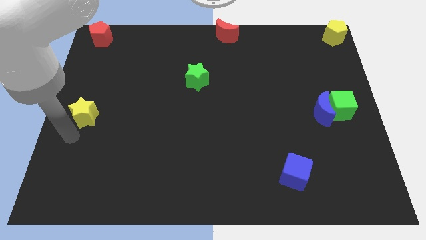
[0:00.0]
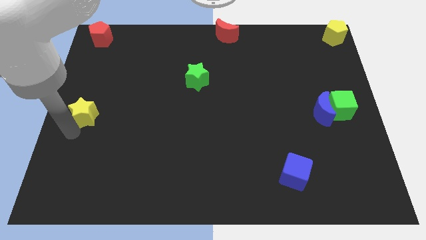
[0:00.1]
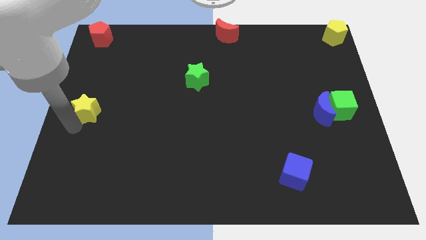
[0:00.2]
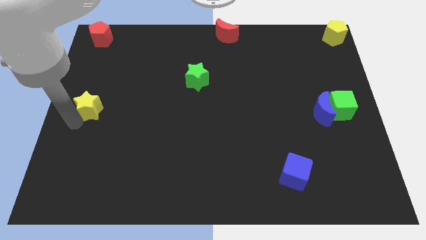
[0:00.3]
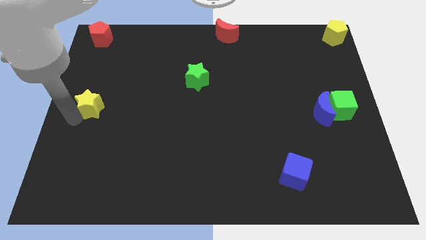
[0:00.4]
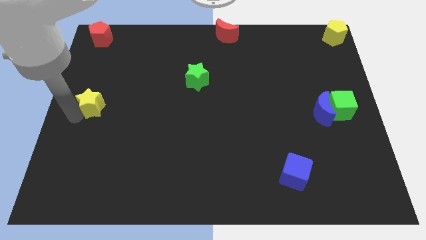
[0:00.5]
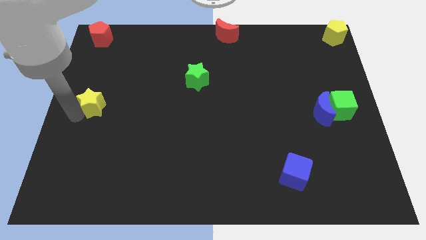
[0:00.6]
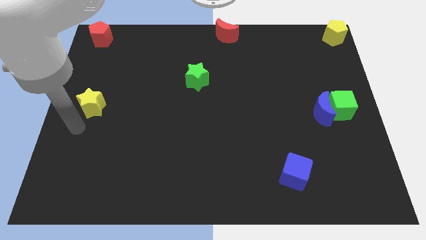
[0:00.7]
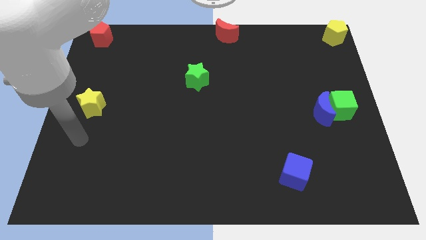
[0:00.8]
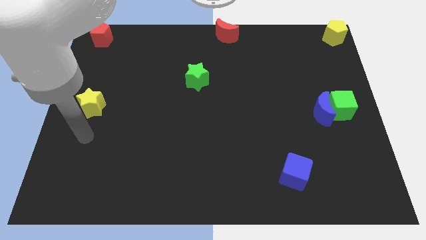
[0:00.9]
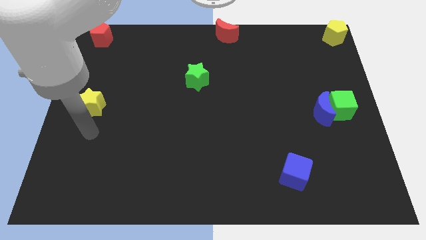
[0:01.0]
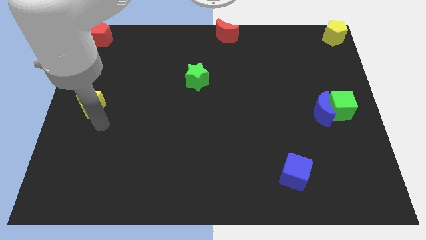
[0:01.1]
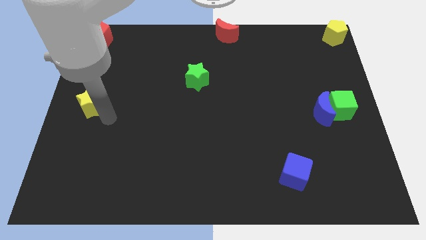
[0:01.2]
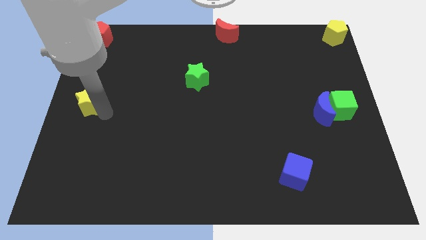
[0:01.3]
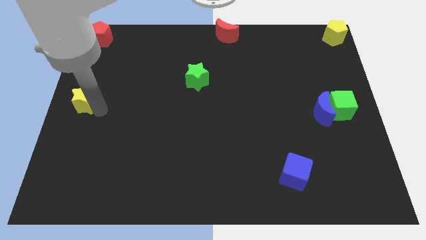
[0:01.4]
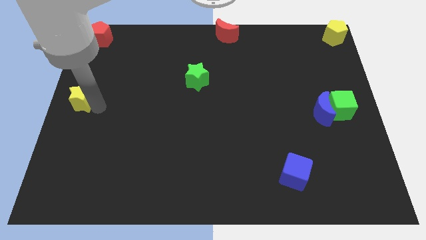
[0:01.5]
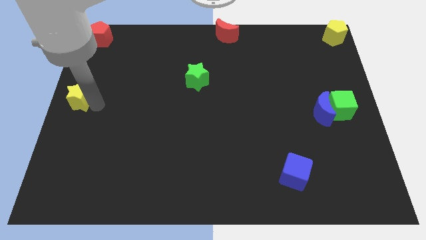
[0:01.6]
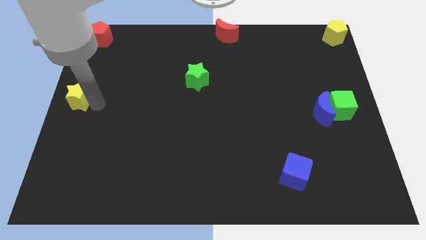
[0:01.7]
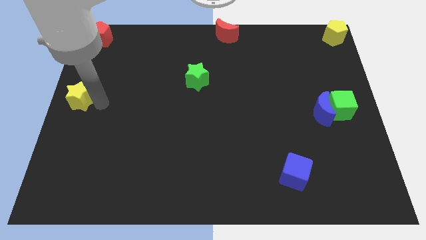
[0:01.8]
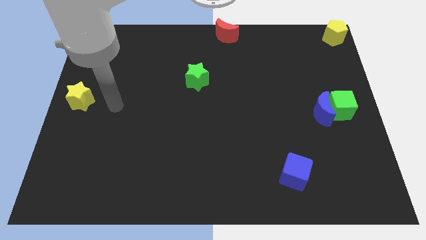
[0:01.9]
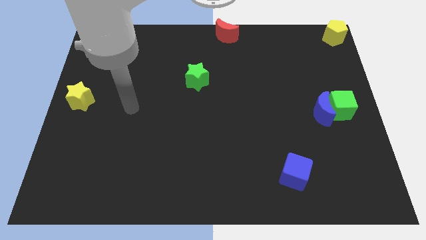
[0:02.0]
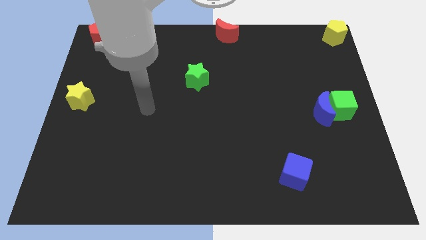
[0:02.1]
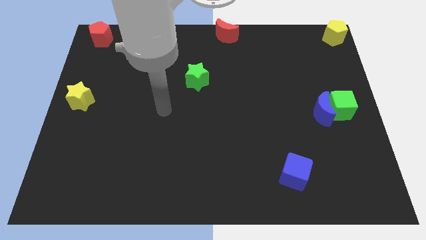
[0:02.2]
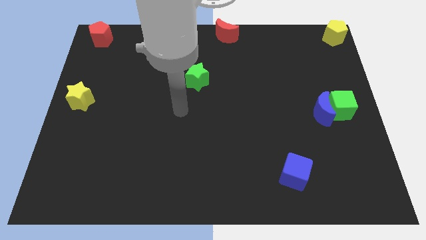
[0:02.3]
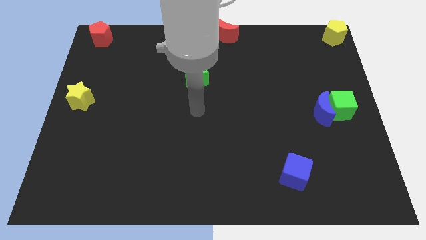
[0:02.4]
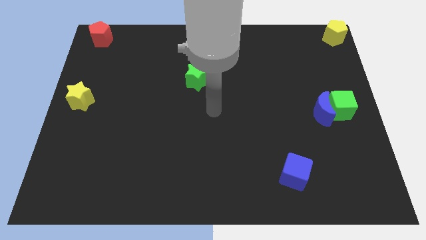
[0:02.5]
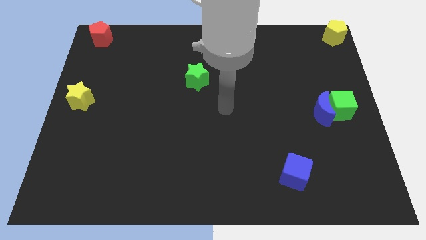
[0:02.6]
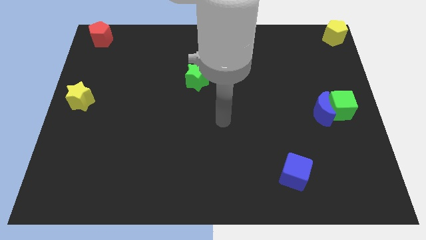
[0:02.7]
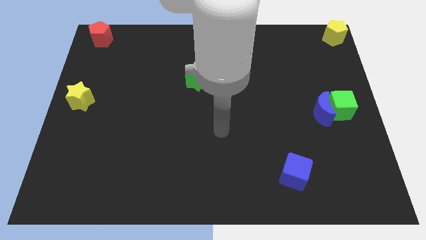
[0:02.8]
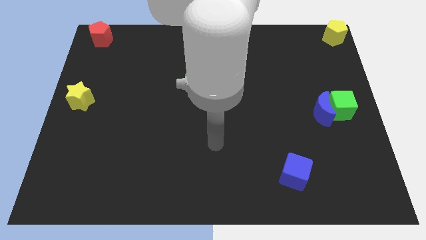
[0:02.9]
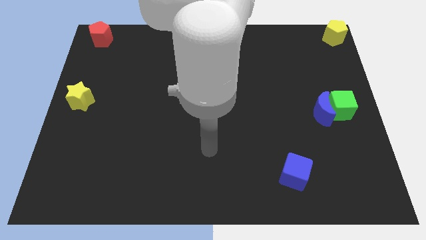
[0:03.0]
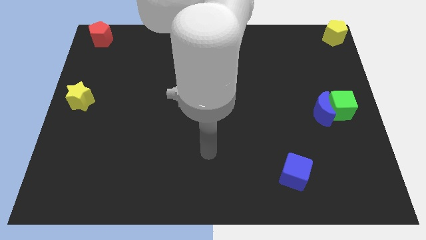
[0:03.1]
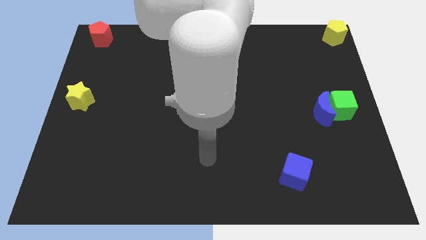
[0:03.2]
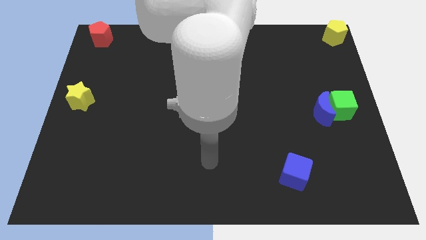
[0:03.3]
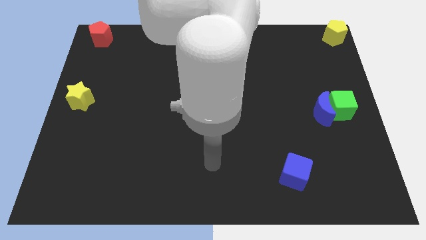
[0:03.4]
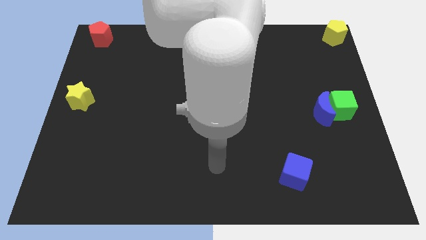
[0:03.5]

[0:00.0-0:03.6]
drag the yellow star diagonally to green star

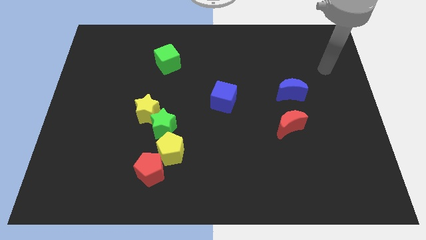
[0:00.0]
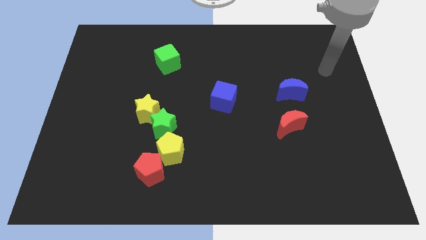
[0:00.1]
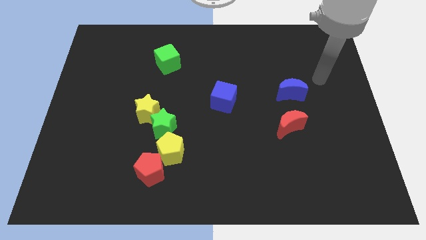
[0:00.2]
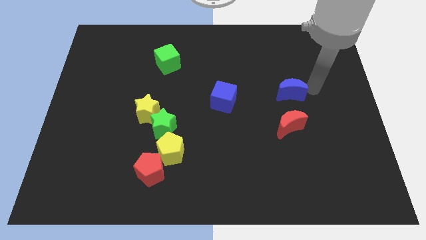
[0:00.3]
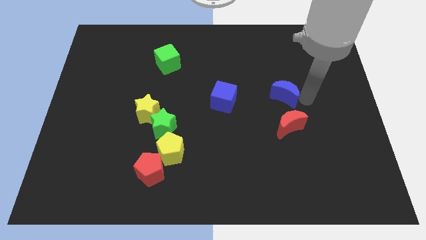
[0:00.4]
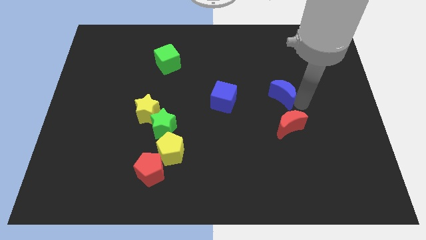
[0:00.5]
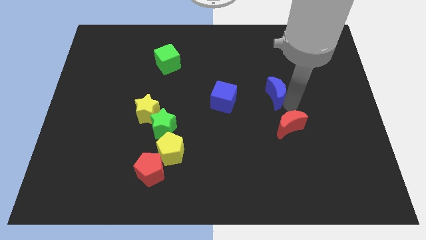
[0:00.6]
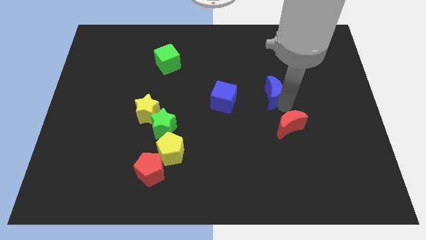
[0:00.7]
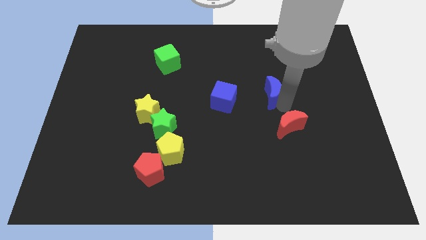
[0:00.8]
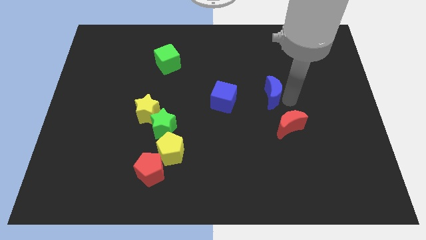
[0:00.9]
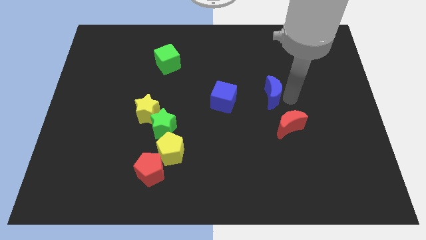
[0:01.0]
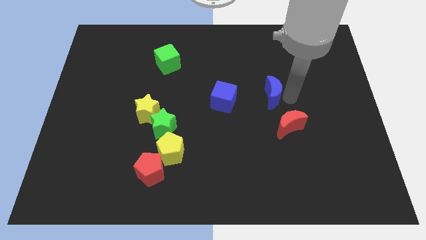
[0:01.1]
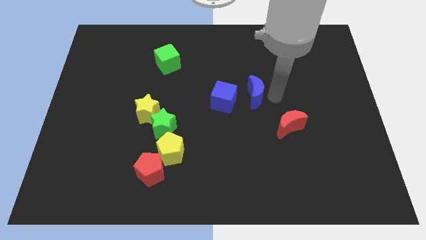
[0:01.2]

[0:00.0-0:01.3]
push the blue crescent to the left of the blue cube

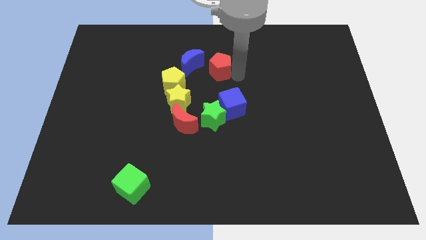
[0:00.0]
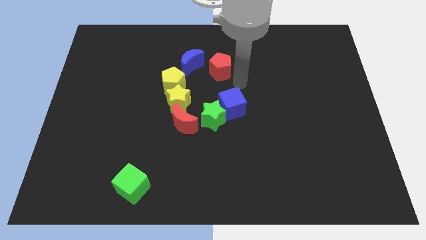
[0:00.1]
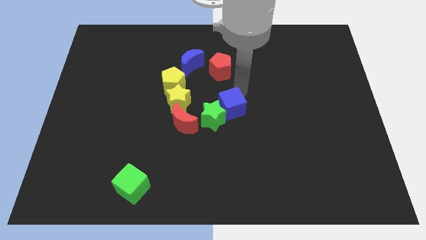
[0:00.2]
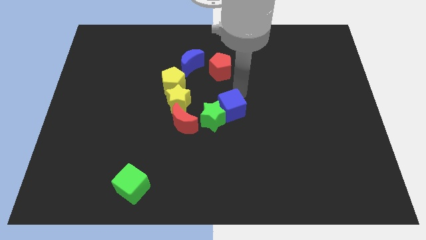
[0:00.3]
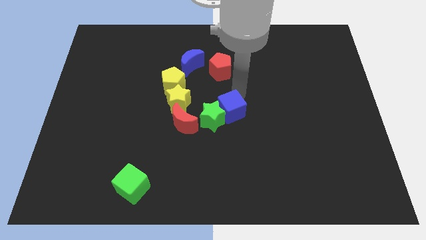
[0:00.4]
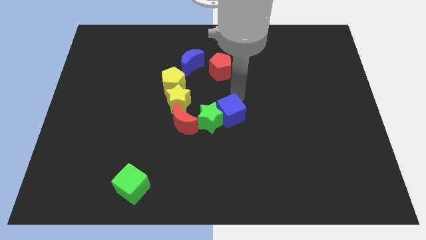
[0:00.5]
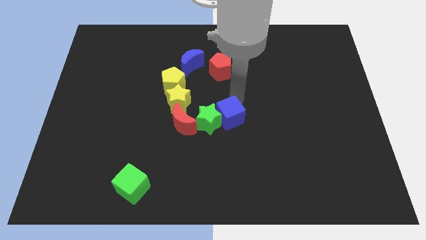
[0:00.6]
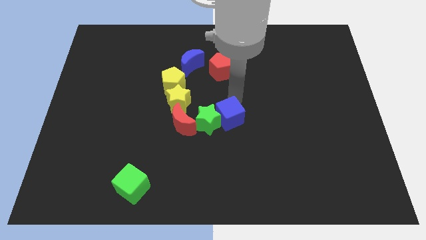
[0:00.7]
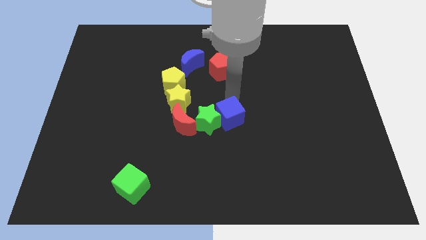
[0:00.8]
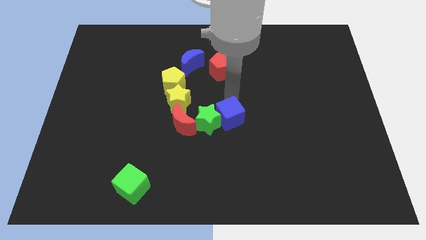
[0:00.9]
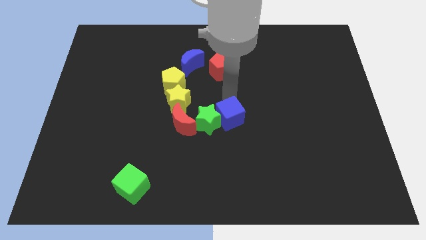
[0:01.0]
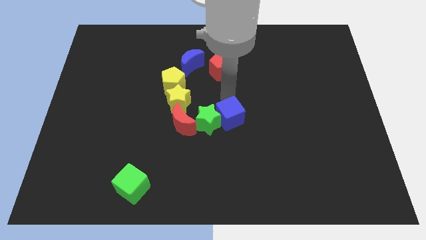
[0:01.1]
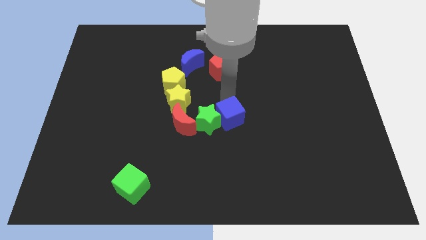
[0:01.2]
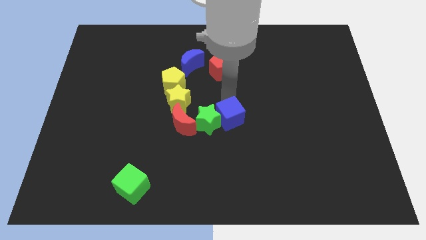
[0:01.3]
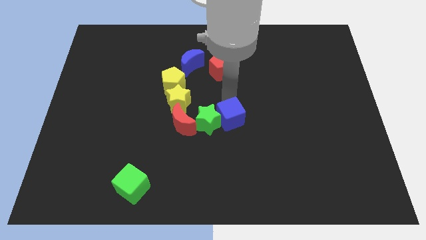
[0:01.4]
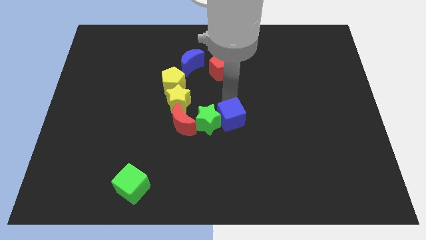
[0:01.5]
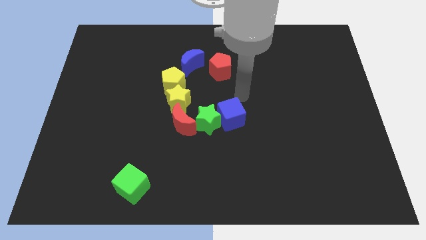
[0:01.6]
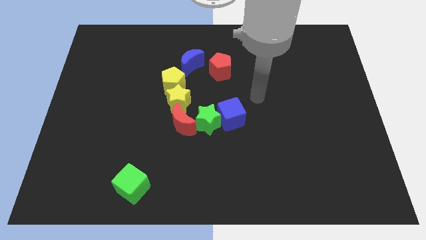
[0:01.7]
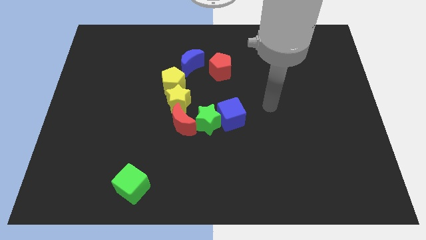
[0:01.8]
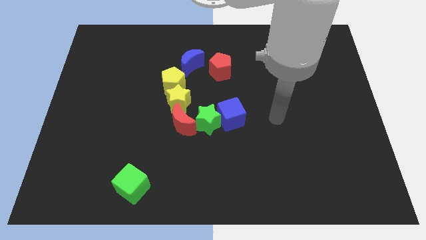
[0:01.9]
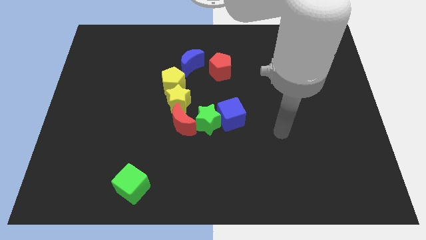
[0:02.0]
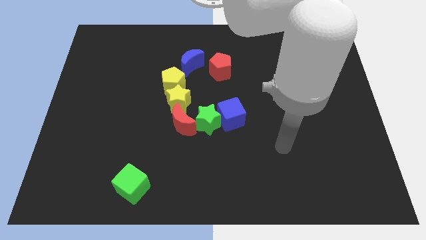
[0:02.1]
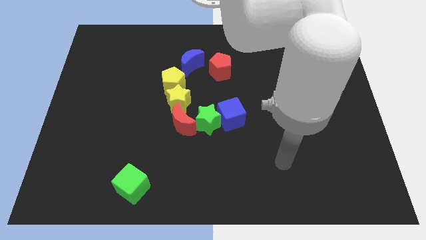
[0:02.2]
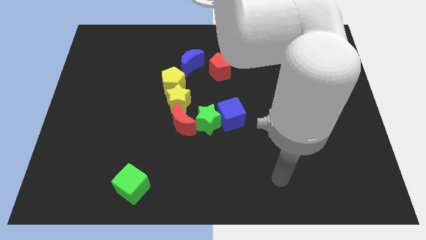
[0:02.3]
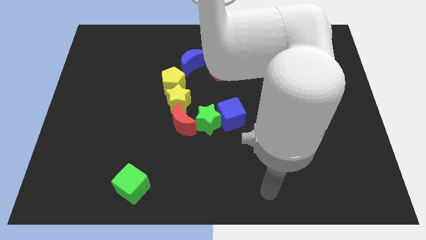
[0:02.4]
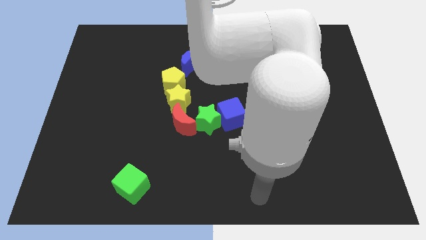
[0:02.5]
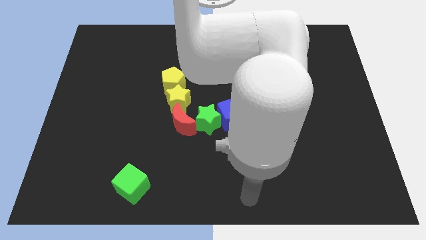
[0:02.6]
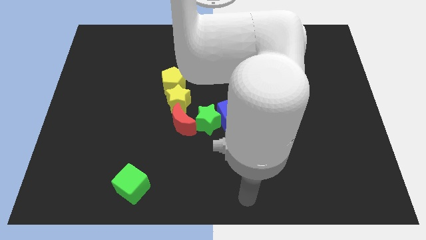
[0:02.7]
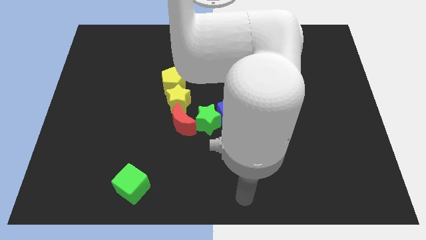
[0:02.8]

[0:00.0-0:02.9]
adjust the blue cube at center of the board

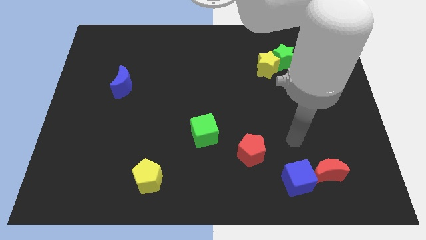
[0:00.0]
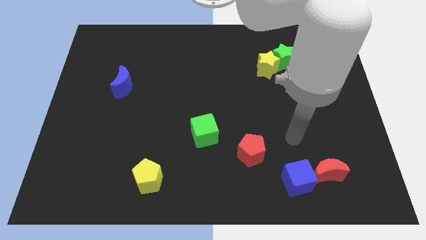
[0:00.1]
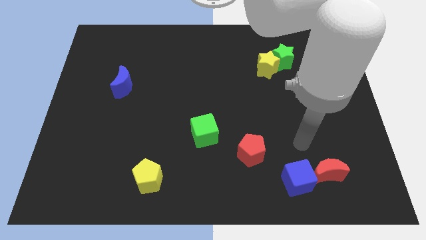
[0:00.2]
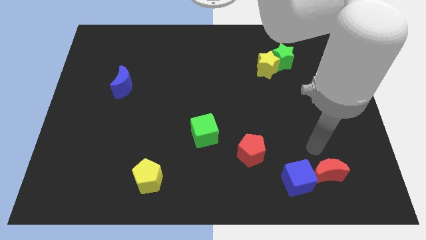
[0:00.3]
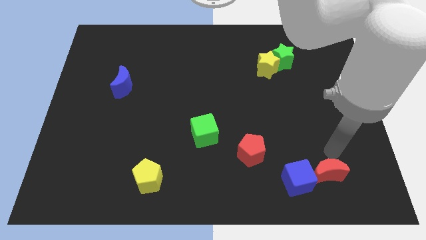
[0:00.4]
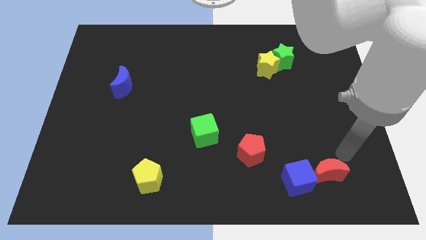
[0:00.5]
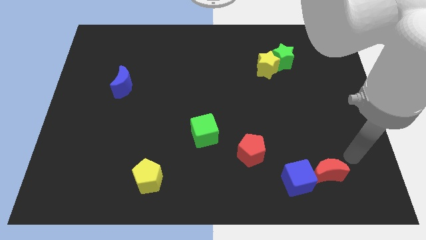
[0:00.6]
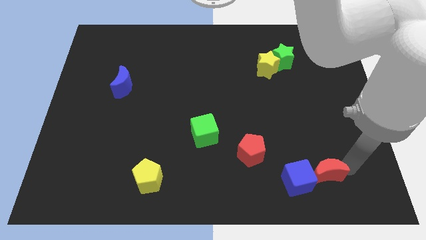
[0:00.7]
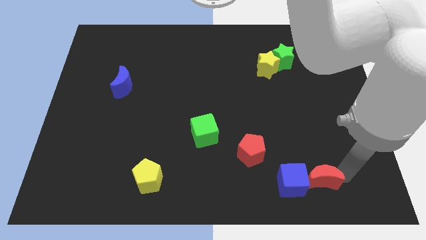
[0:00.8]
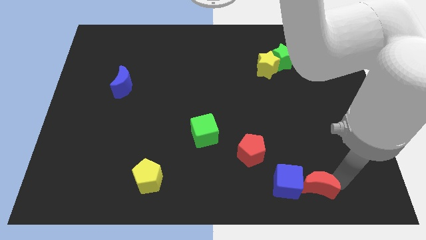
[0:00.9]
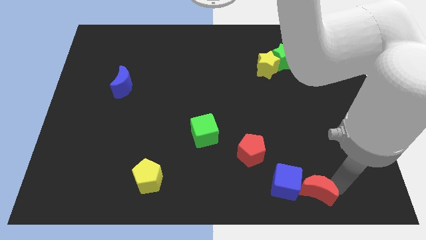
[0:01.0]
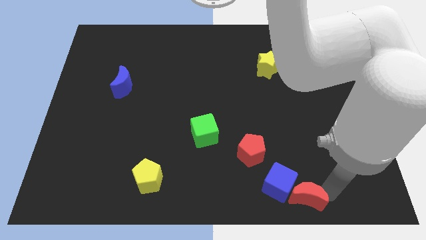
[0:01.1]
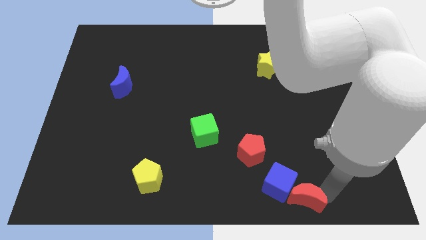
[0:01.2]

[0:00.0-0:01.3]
push the blue cube and red moon towards the bottom center
